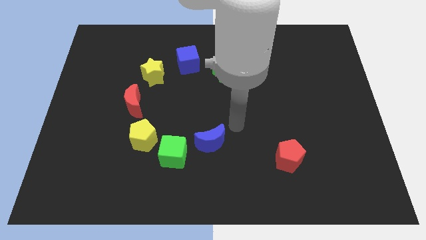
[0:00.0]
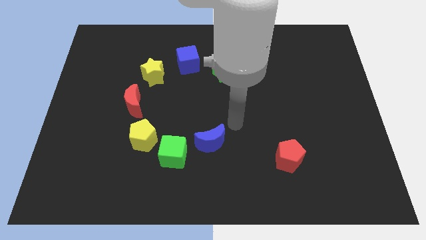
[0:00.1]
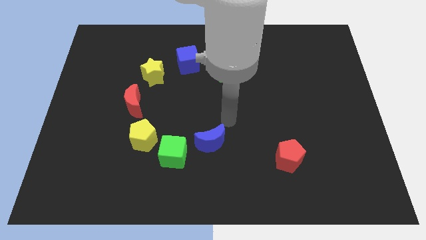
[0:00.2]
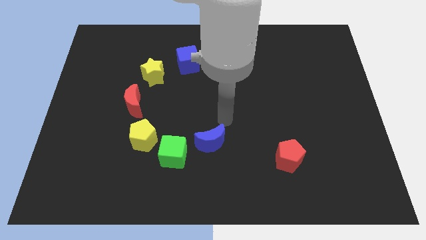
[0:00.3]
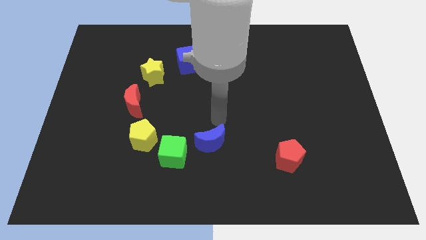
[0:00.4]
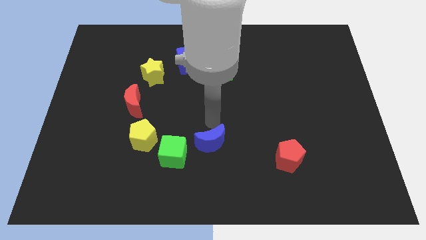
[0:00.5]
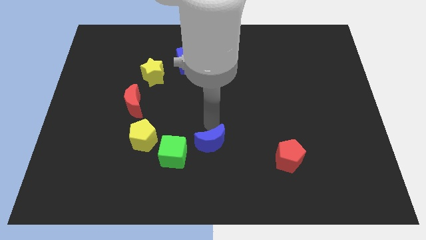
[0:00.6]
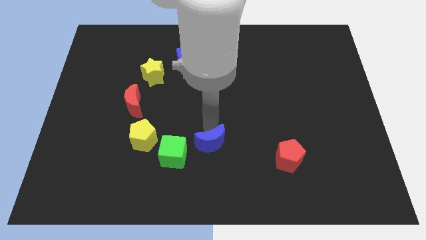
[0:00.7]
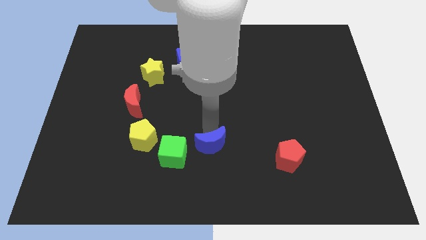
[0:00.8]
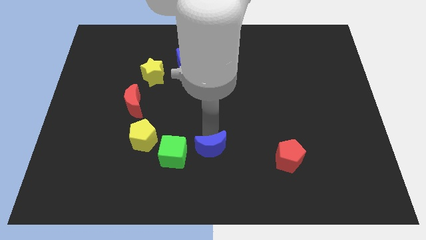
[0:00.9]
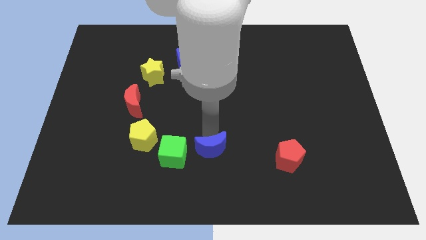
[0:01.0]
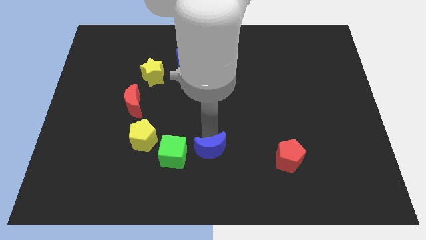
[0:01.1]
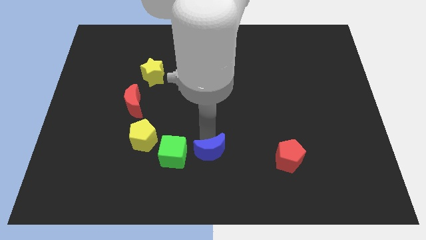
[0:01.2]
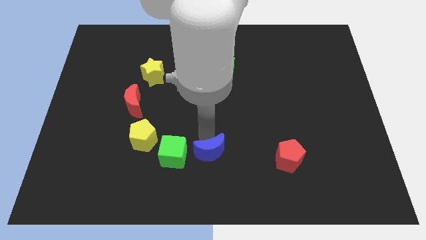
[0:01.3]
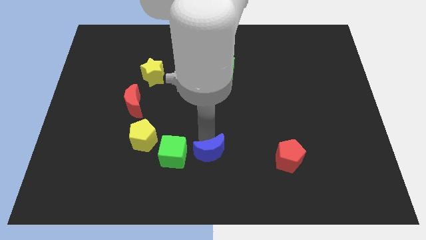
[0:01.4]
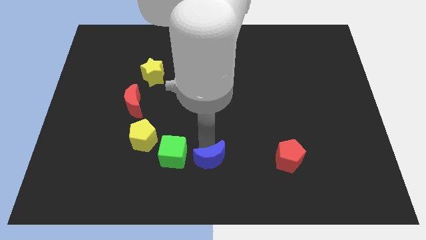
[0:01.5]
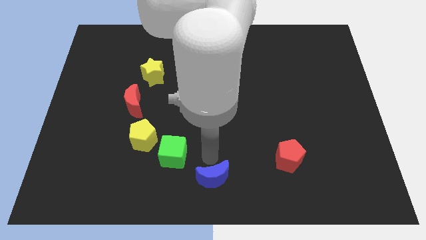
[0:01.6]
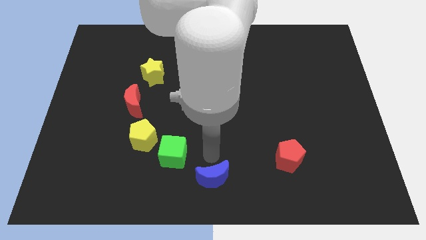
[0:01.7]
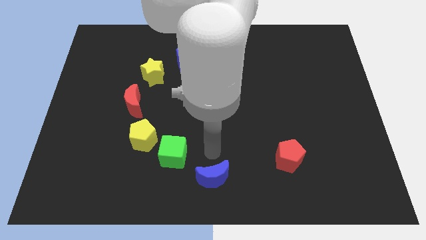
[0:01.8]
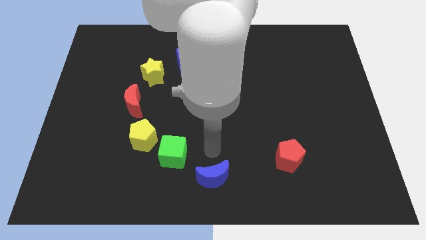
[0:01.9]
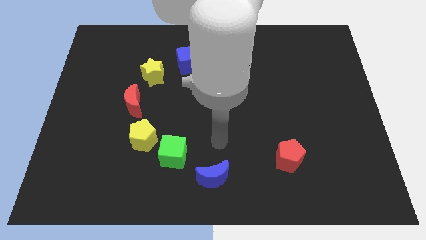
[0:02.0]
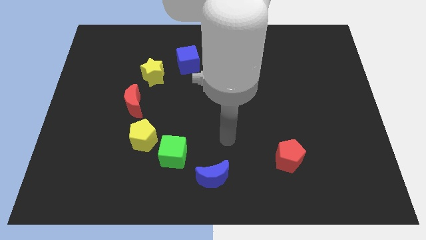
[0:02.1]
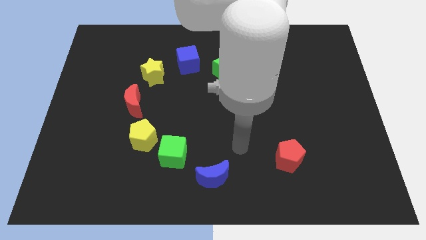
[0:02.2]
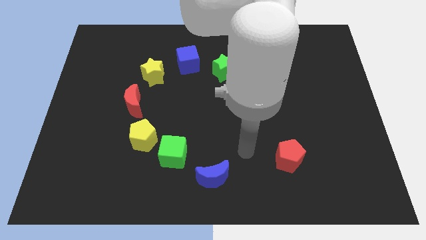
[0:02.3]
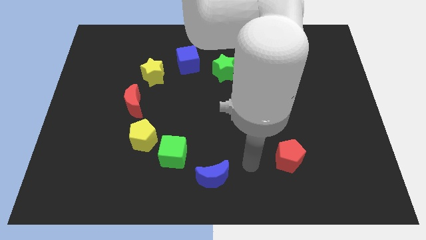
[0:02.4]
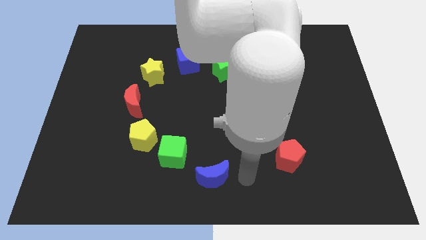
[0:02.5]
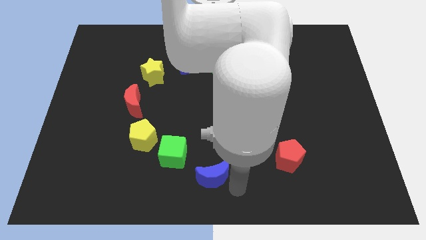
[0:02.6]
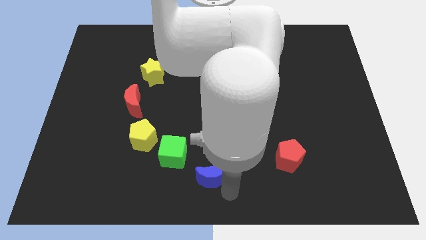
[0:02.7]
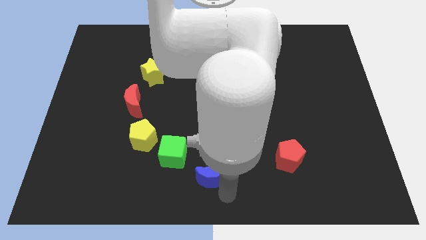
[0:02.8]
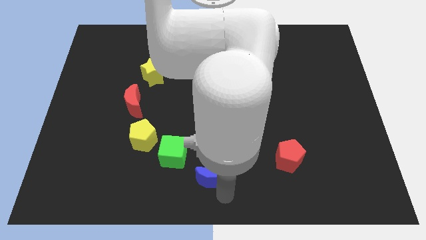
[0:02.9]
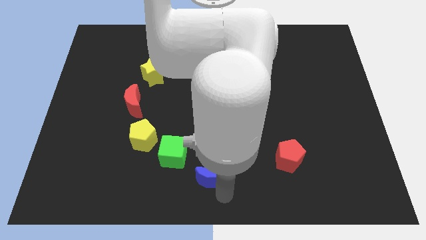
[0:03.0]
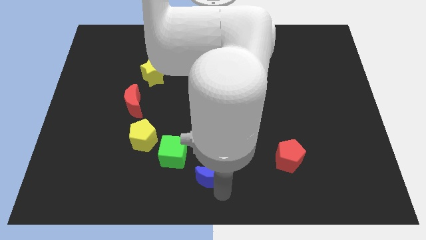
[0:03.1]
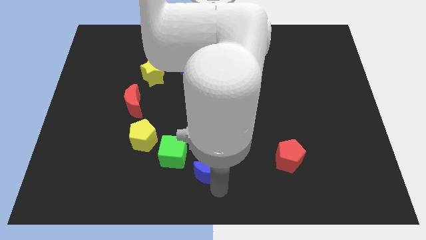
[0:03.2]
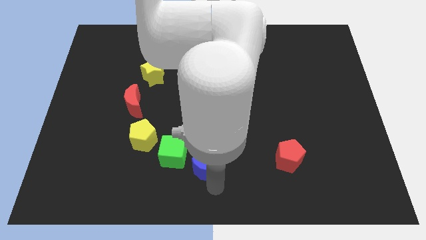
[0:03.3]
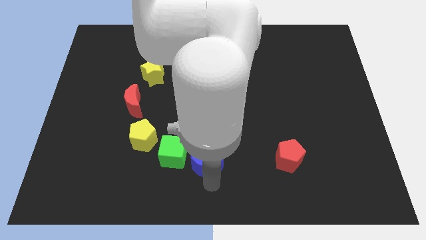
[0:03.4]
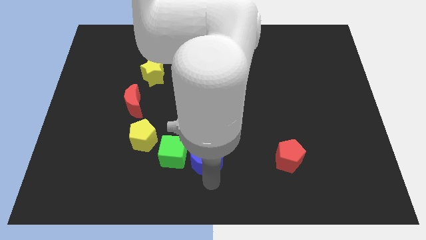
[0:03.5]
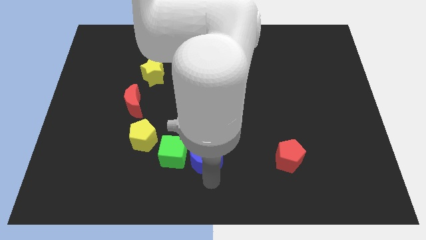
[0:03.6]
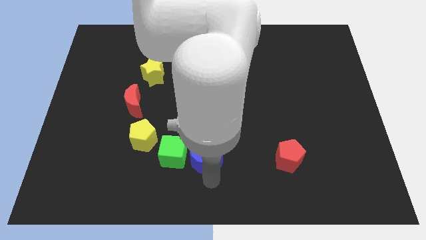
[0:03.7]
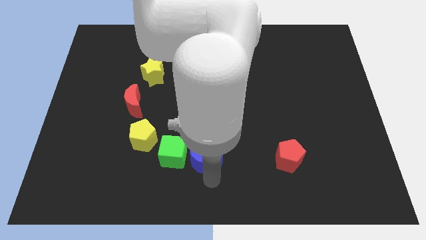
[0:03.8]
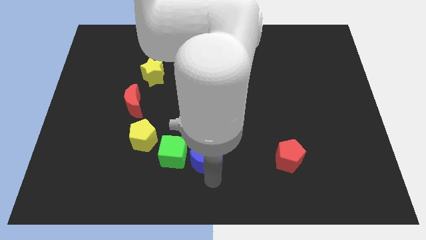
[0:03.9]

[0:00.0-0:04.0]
move blue crescent to the bottom center of the board

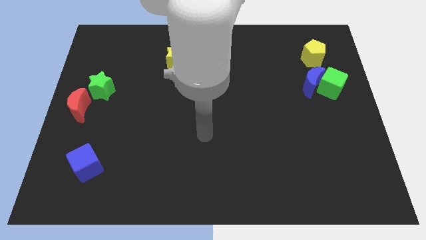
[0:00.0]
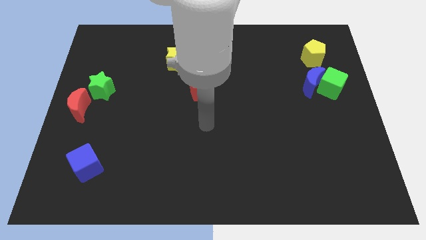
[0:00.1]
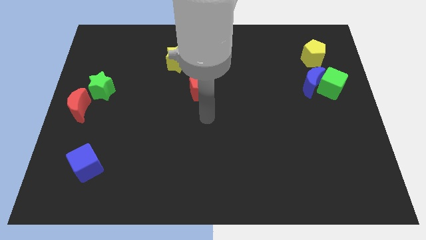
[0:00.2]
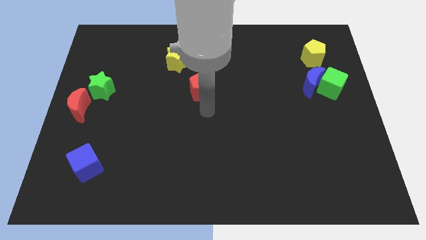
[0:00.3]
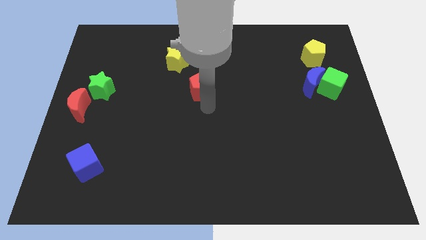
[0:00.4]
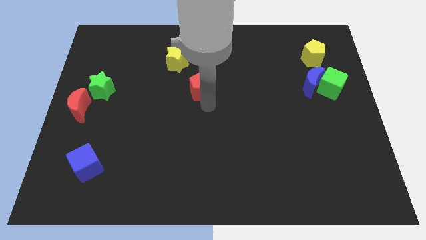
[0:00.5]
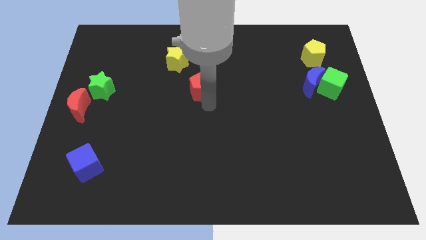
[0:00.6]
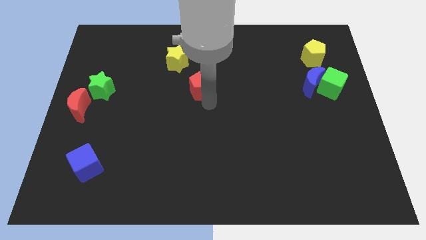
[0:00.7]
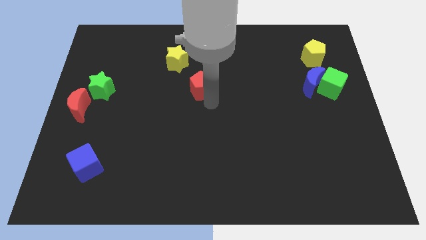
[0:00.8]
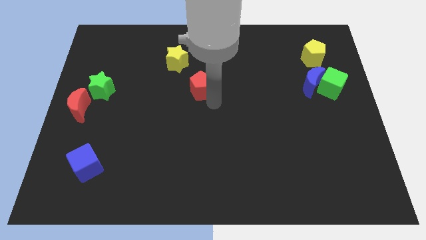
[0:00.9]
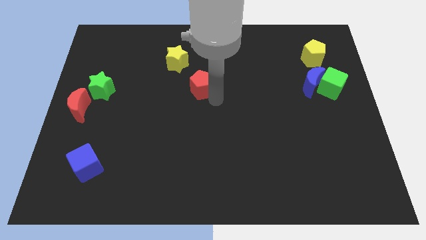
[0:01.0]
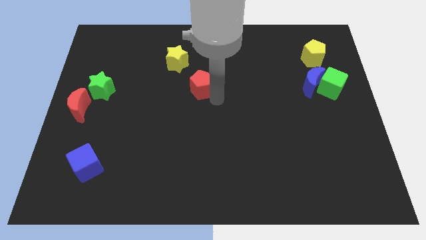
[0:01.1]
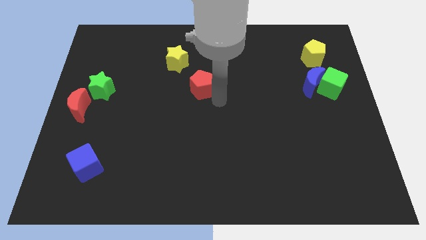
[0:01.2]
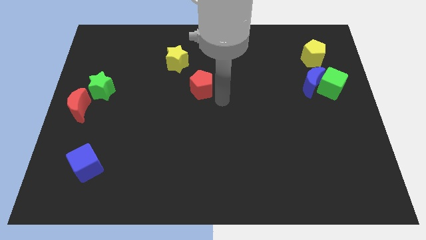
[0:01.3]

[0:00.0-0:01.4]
slightly push the red pentagon to the top of the board

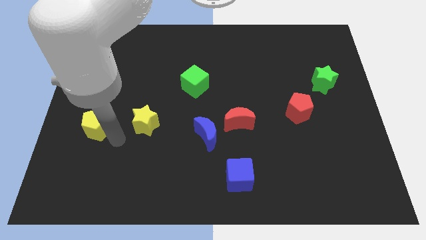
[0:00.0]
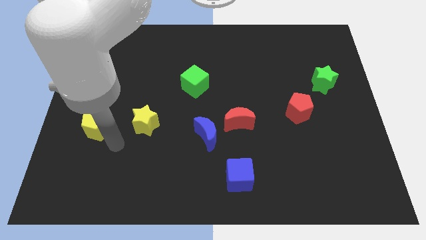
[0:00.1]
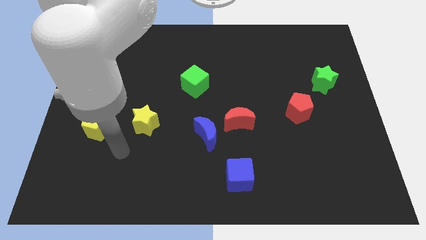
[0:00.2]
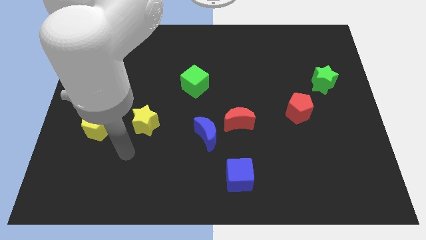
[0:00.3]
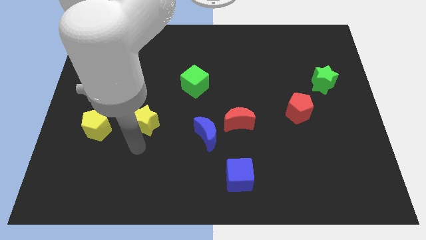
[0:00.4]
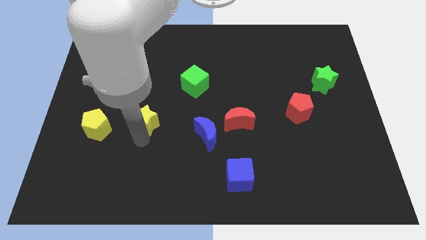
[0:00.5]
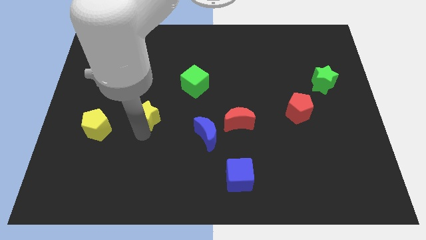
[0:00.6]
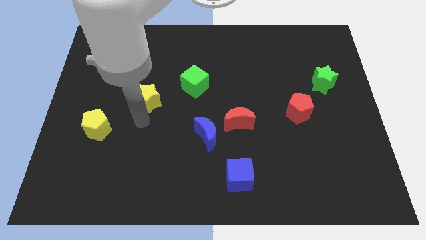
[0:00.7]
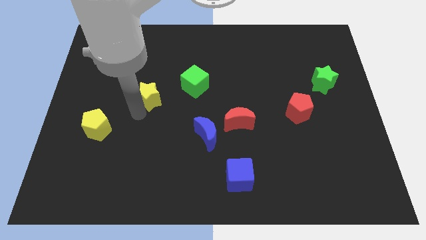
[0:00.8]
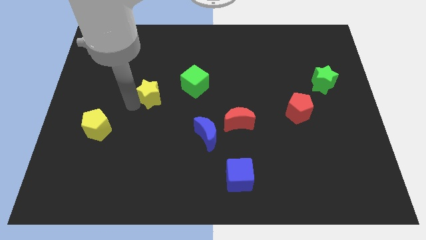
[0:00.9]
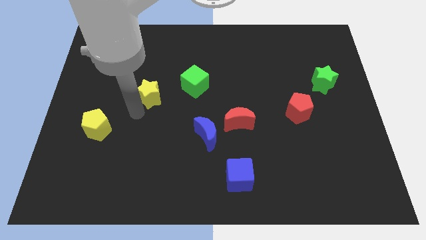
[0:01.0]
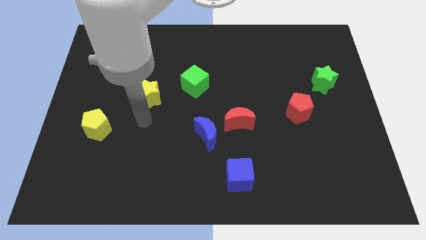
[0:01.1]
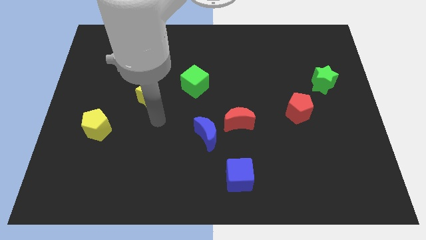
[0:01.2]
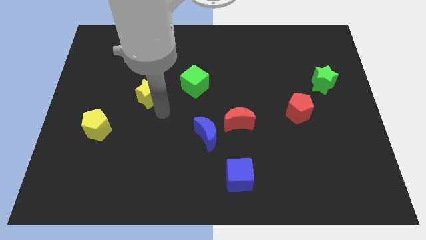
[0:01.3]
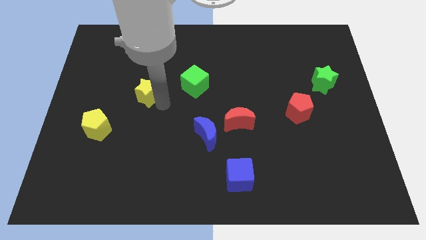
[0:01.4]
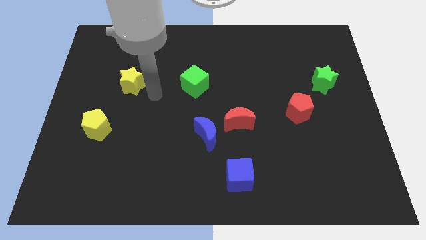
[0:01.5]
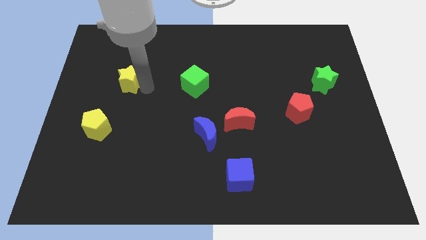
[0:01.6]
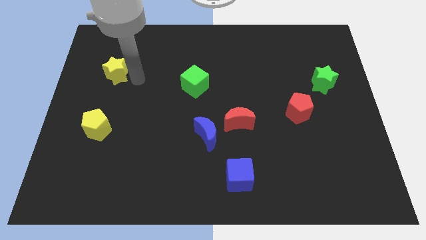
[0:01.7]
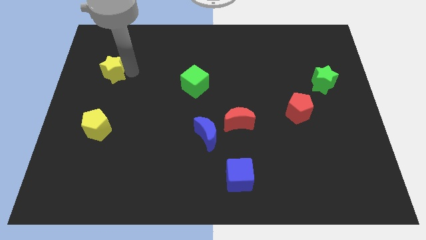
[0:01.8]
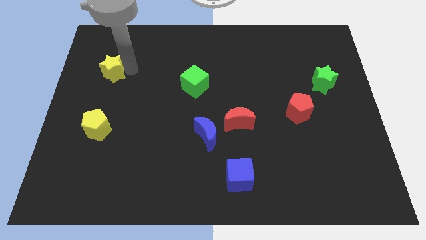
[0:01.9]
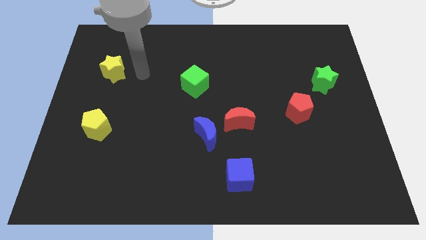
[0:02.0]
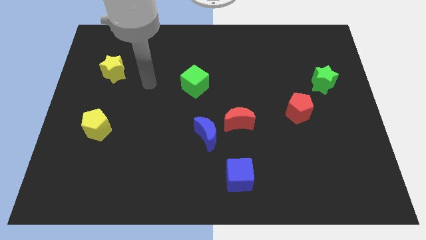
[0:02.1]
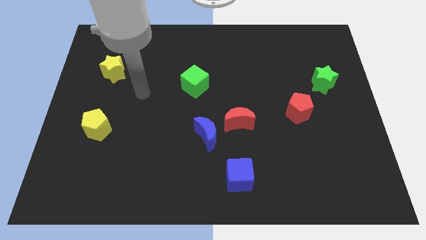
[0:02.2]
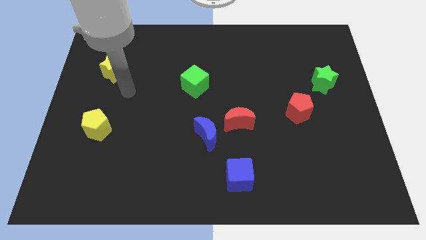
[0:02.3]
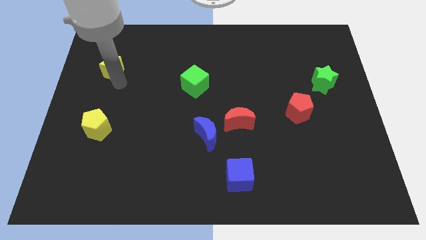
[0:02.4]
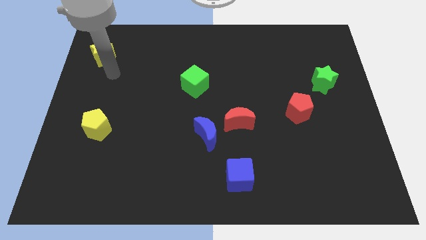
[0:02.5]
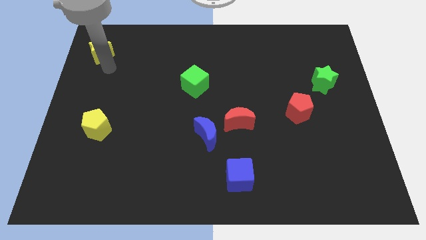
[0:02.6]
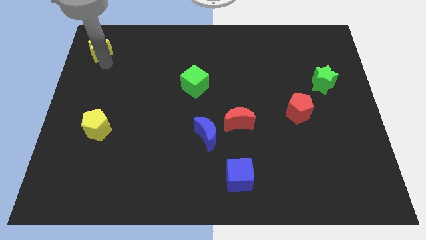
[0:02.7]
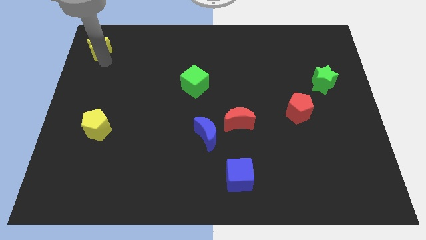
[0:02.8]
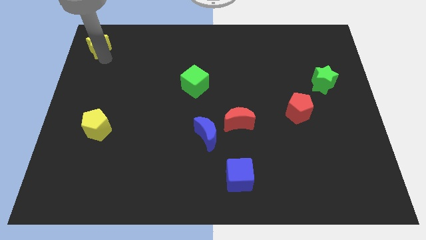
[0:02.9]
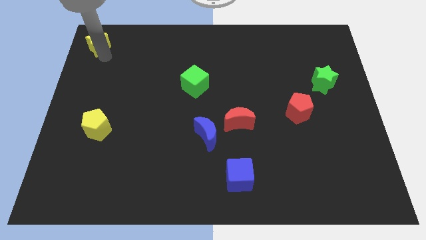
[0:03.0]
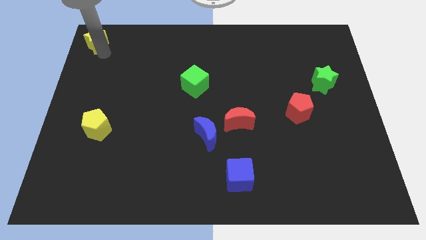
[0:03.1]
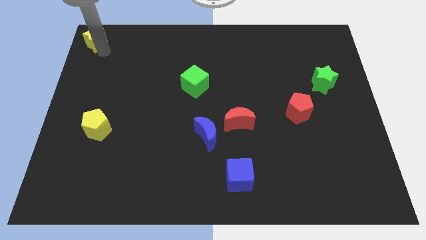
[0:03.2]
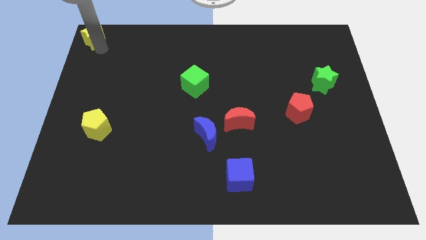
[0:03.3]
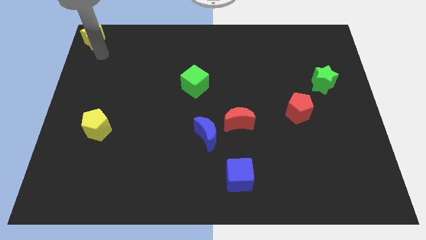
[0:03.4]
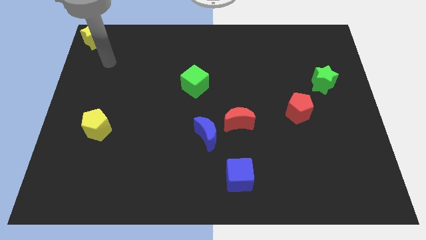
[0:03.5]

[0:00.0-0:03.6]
move the yellow star to the top left corner of the board
